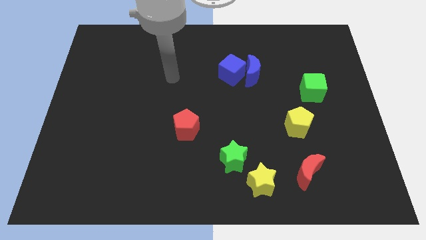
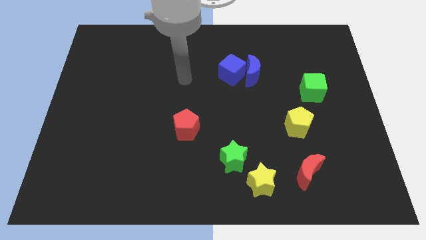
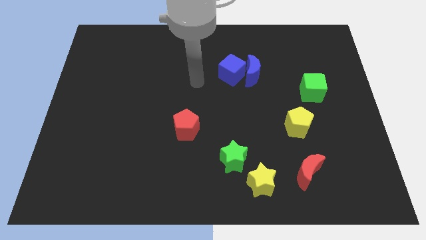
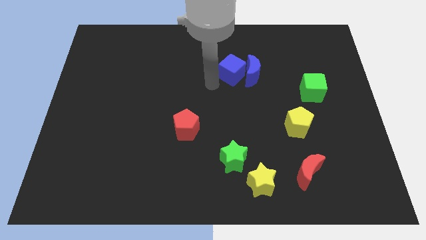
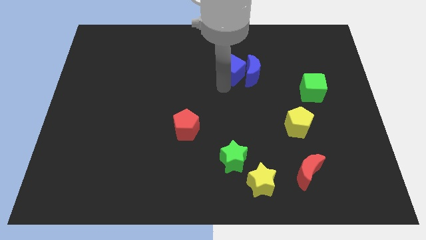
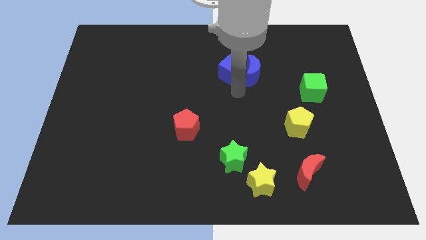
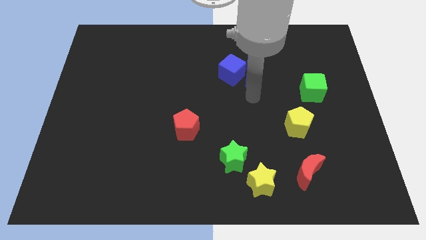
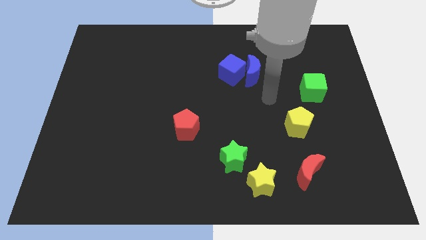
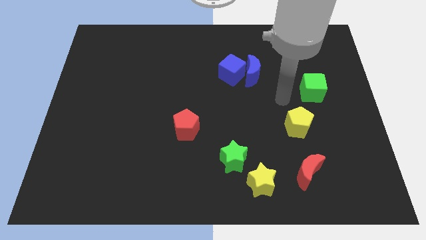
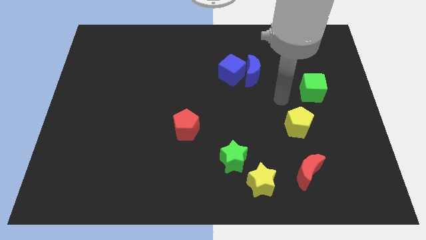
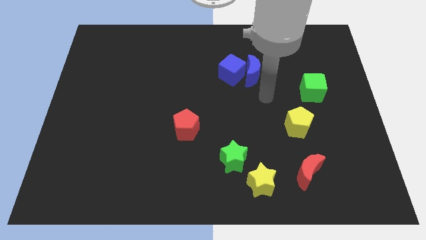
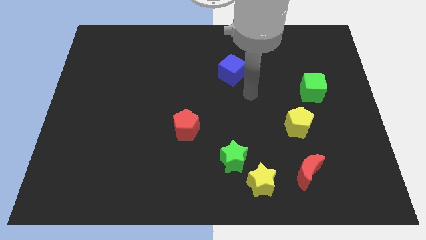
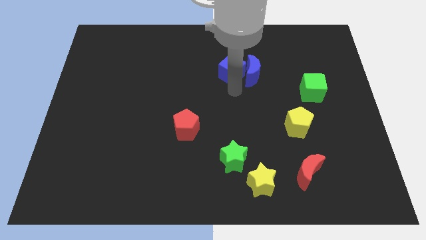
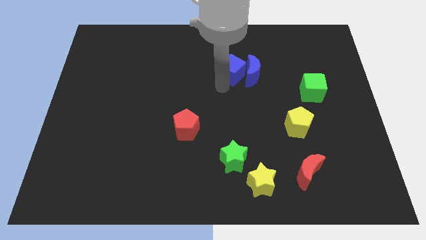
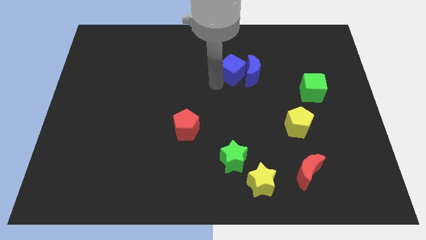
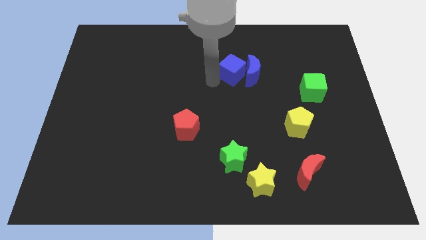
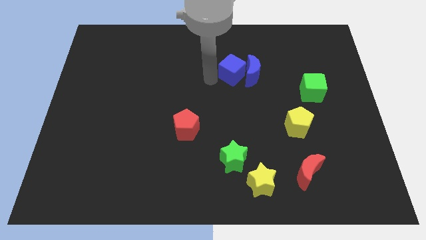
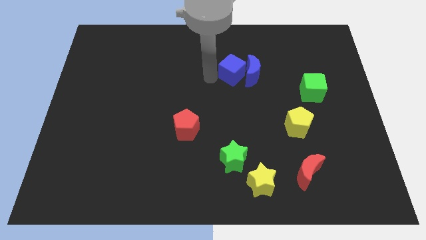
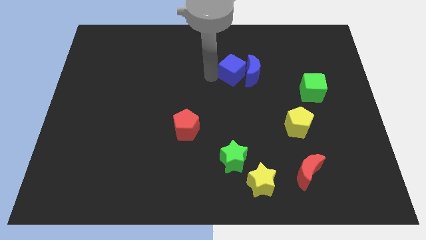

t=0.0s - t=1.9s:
move your arm close to the blue cube

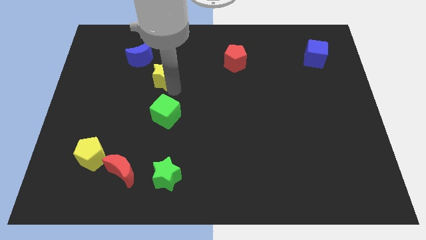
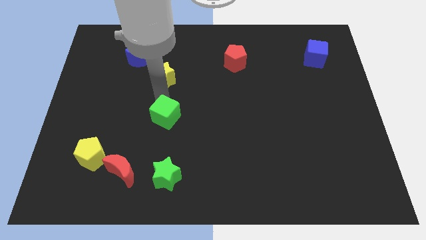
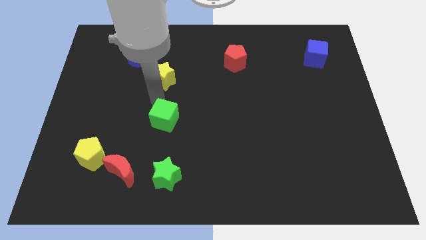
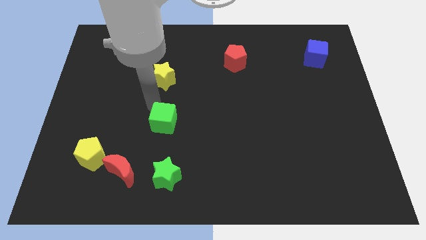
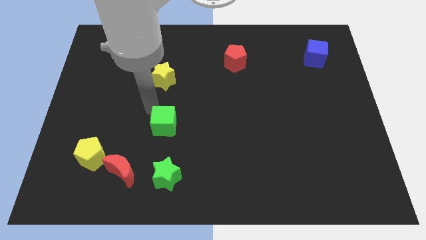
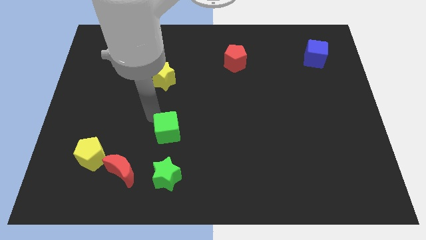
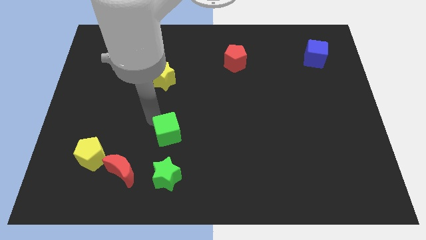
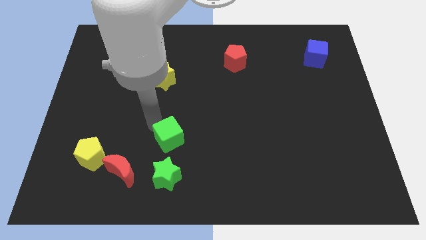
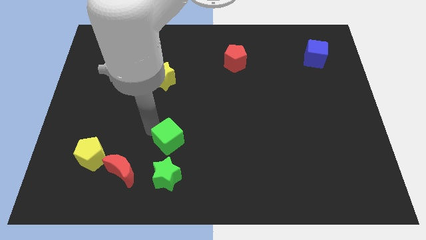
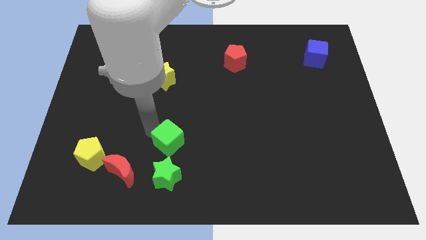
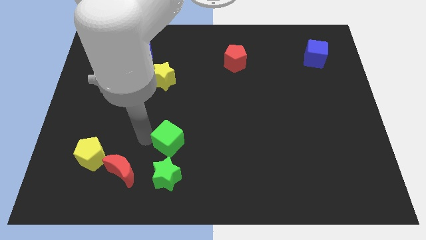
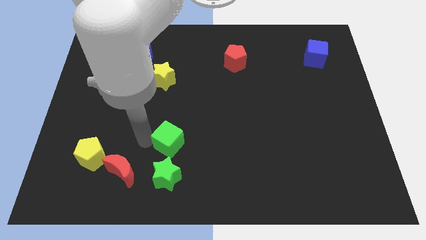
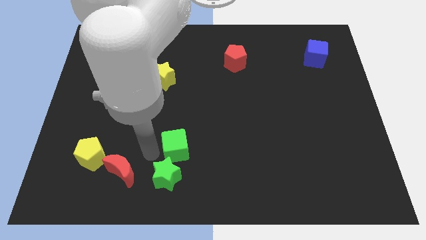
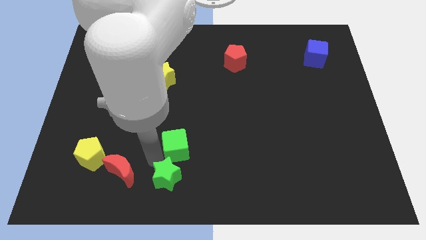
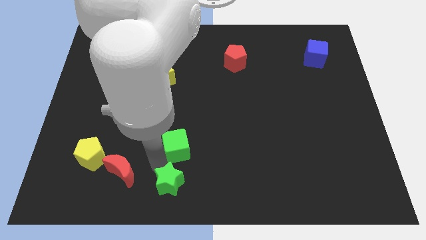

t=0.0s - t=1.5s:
push the green cube above the green star

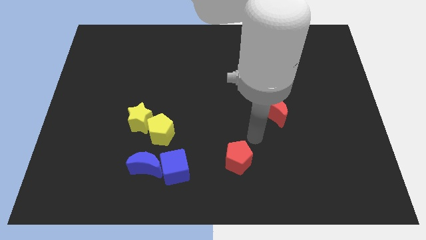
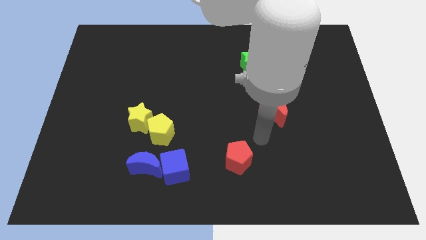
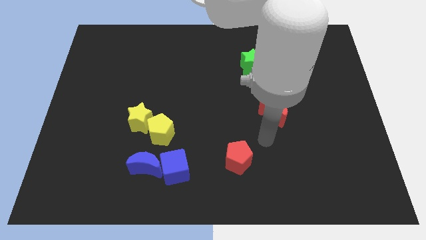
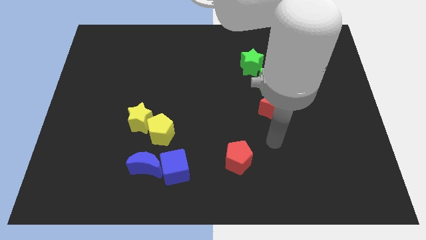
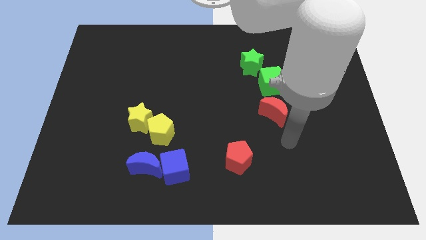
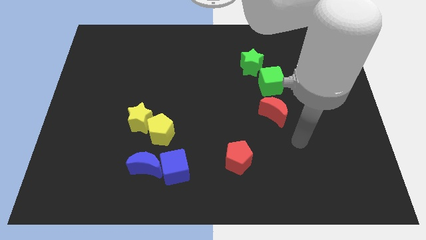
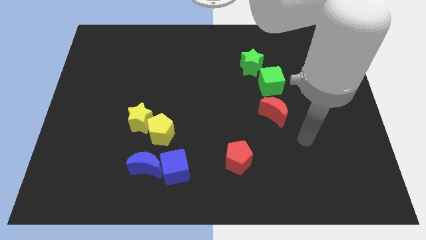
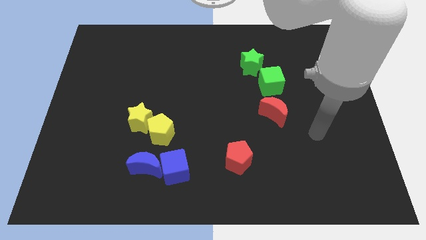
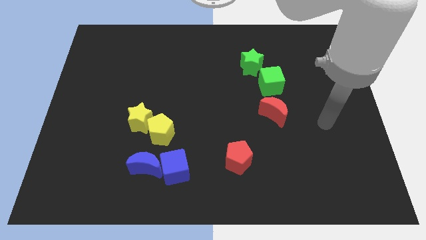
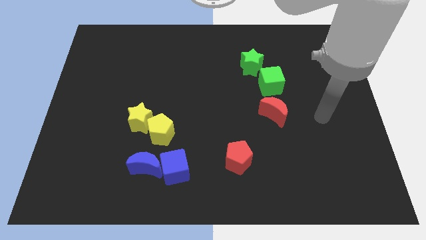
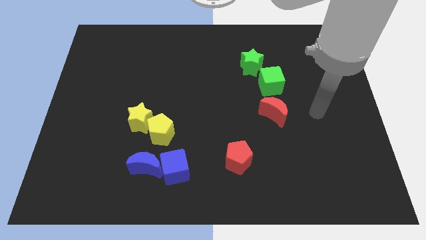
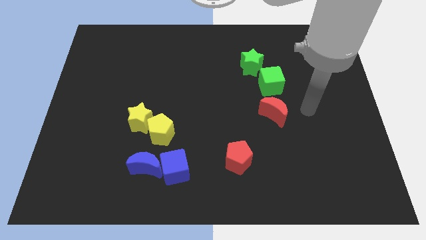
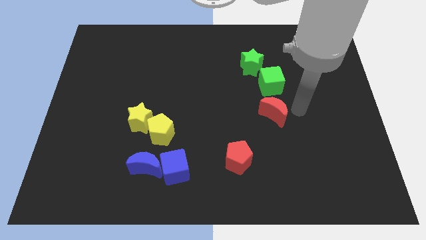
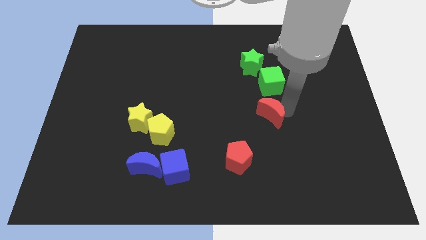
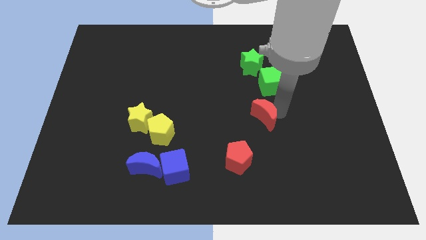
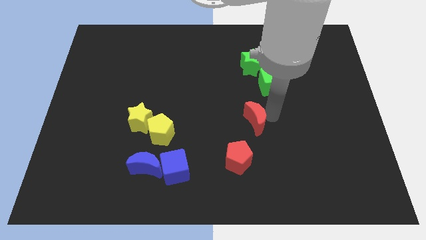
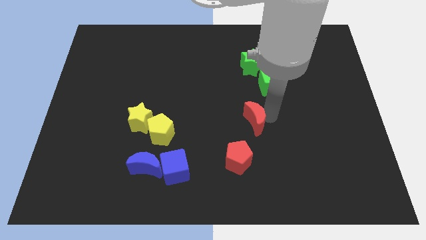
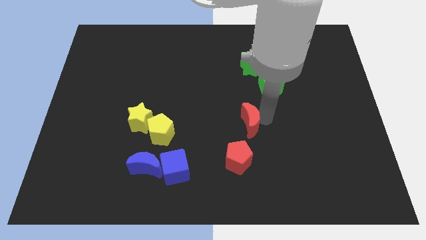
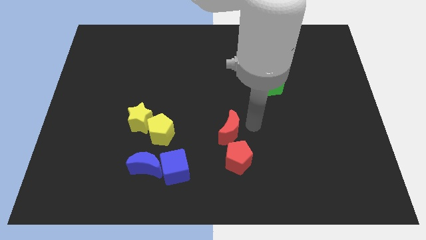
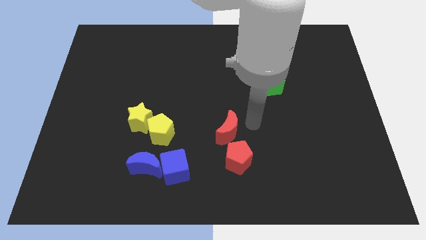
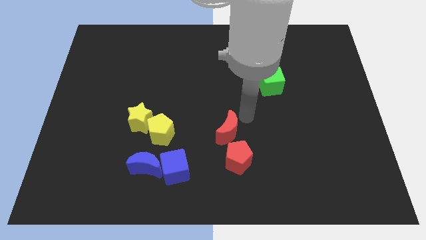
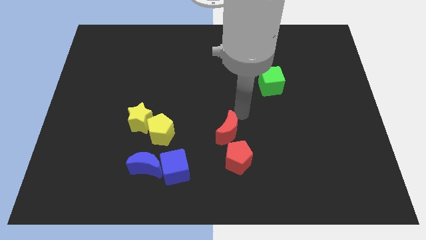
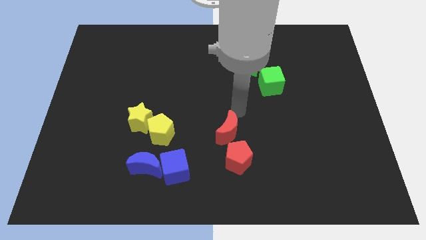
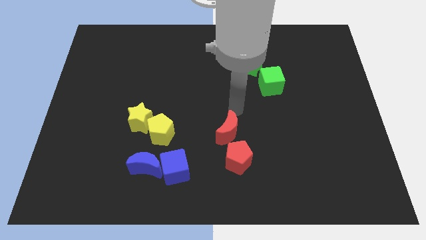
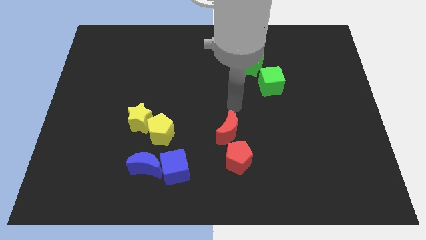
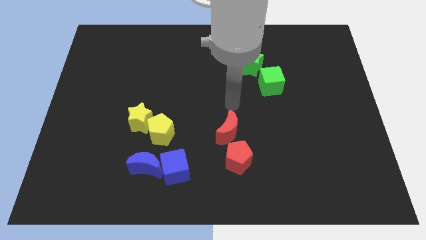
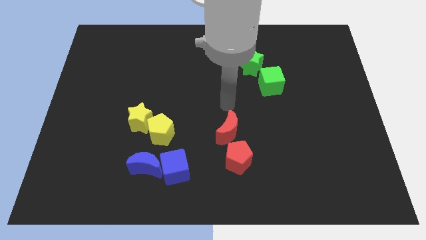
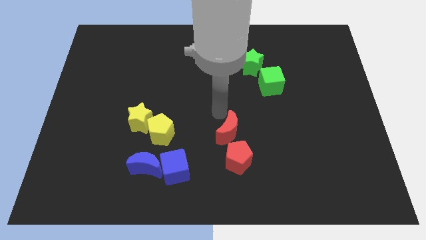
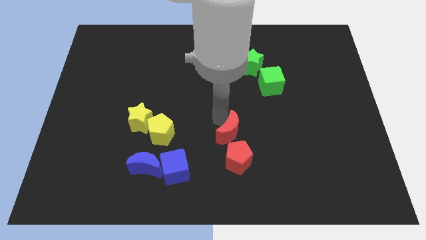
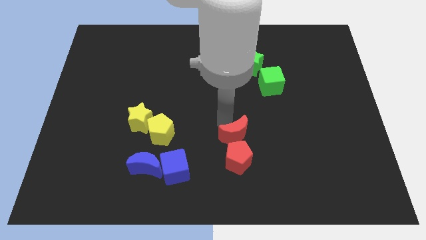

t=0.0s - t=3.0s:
push the red moon above the red pentagon

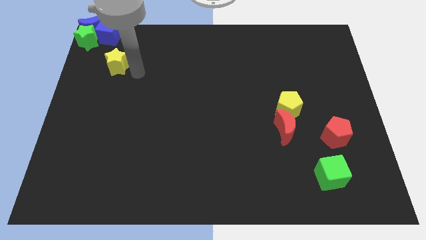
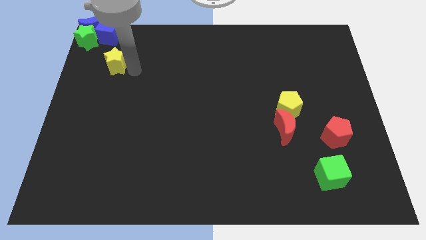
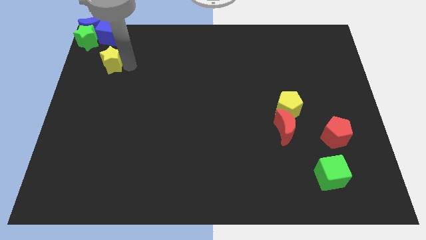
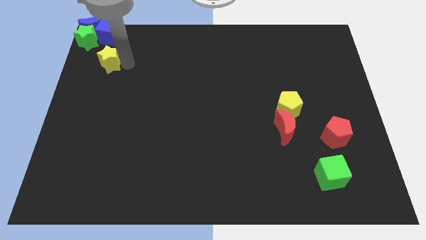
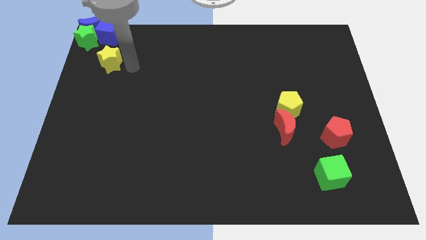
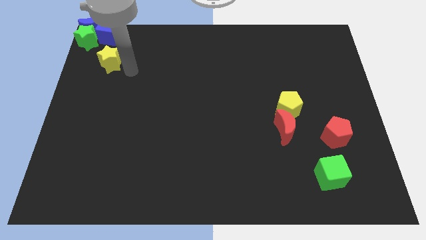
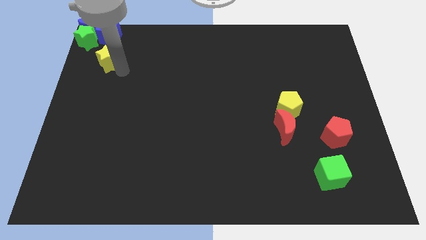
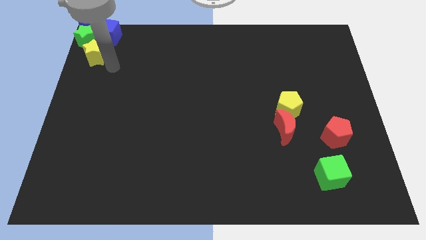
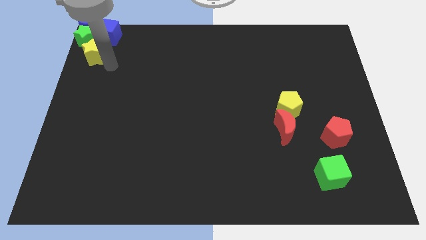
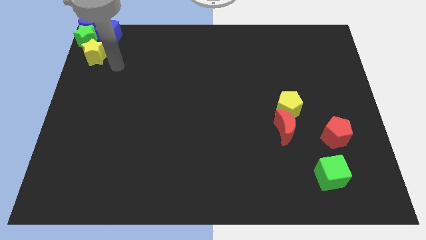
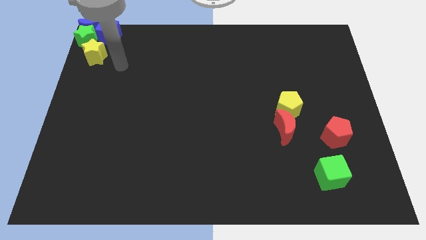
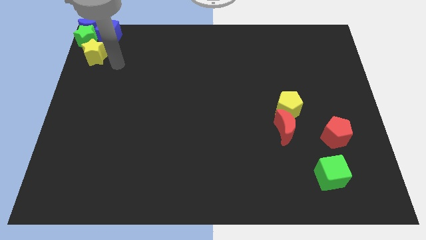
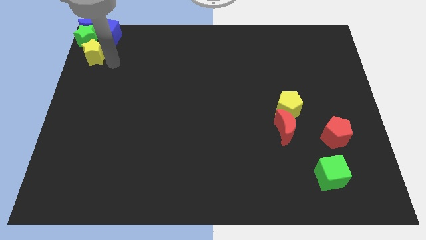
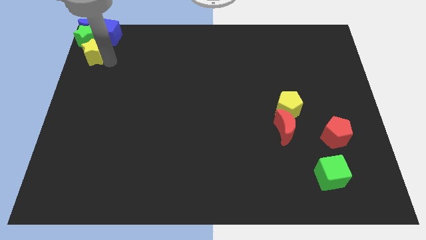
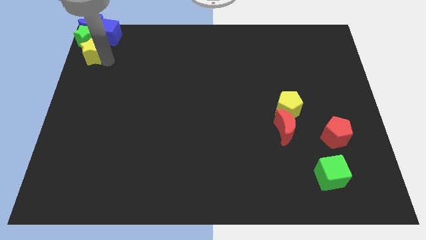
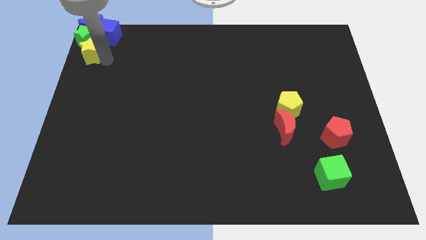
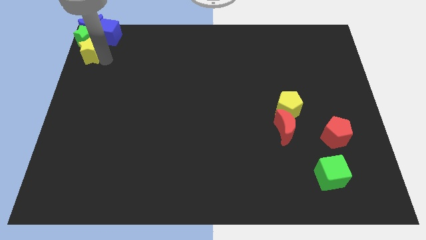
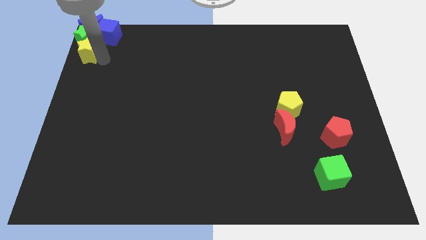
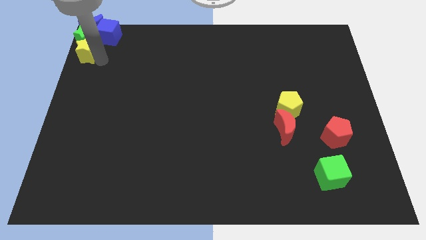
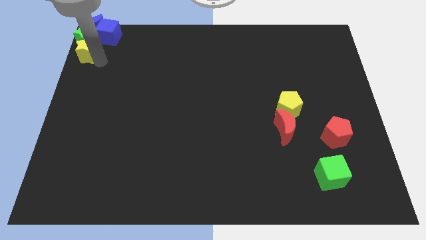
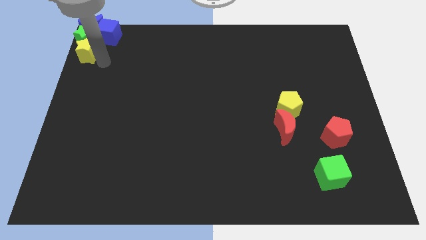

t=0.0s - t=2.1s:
move yellow star below the green star

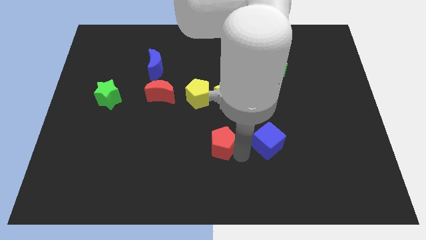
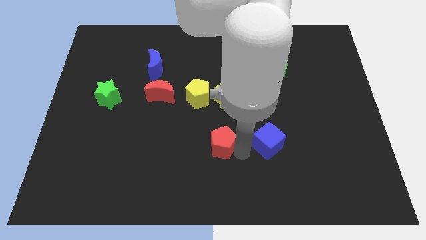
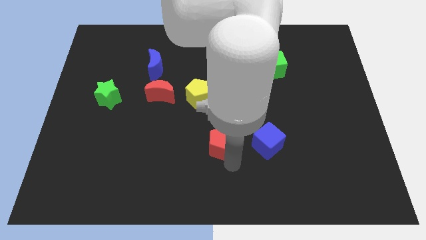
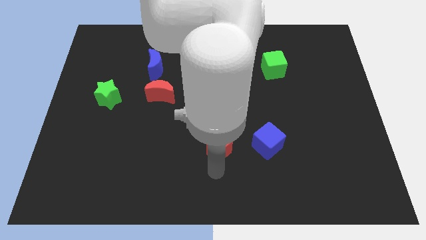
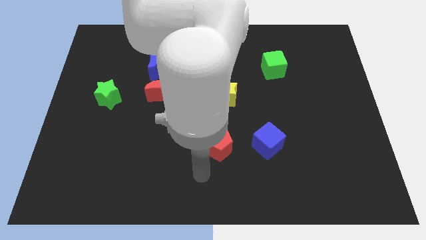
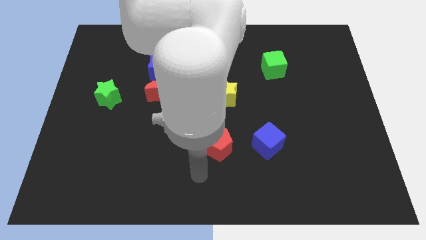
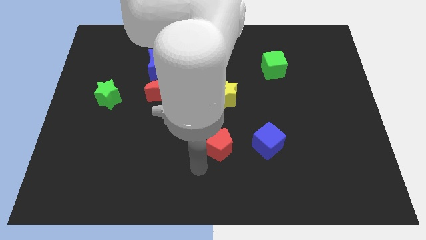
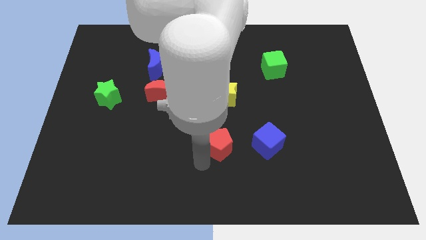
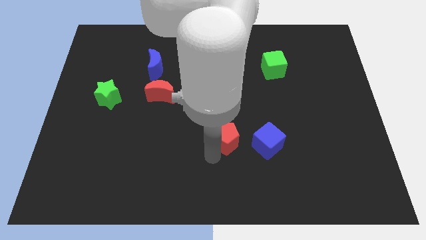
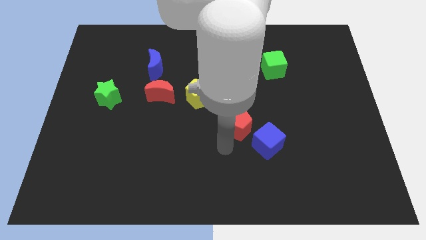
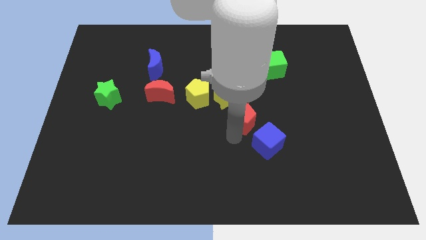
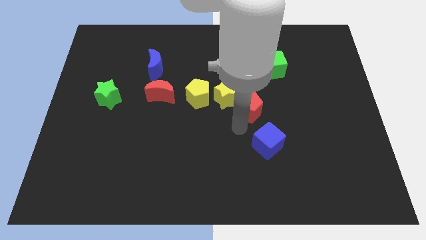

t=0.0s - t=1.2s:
move red pentagon in between blue cube and yellow star
